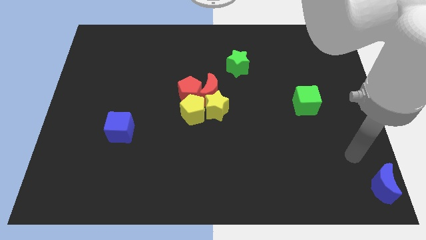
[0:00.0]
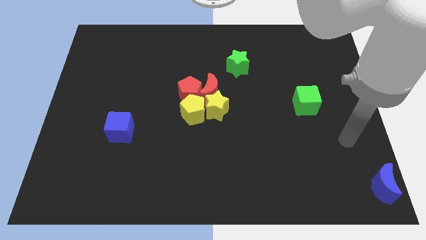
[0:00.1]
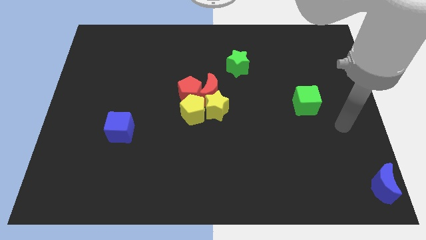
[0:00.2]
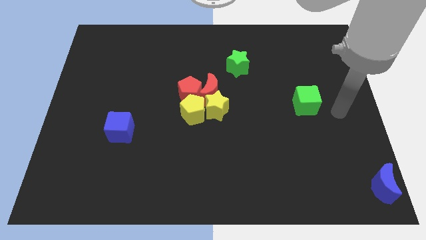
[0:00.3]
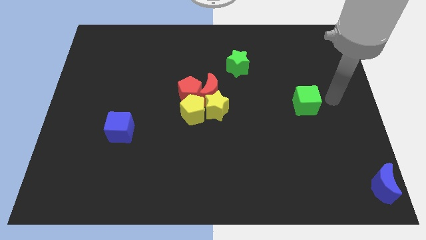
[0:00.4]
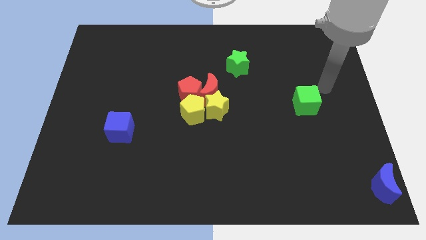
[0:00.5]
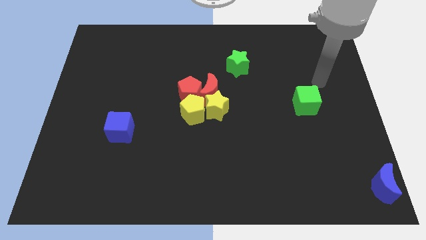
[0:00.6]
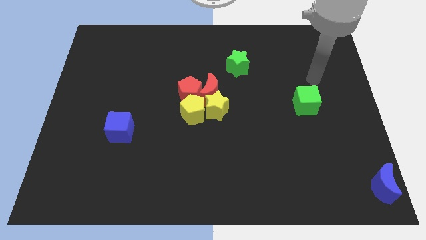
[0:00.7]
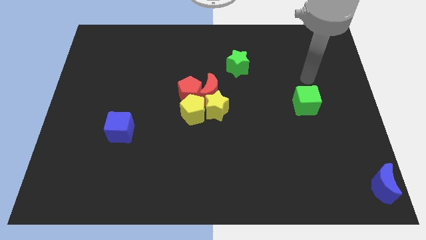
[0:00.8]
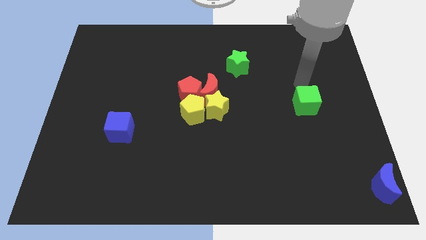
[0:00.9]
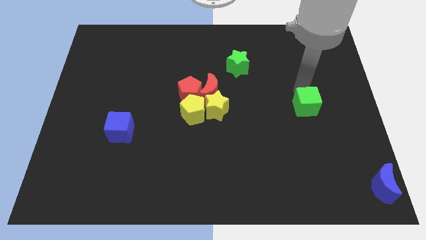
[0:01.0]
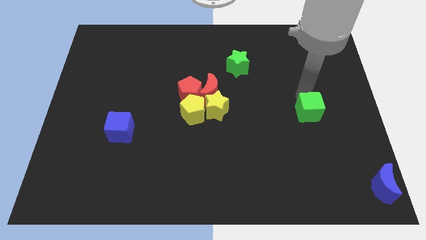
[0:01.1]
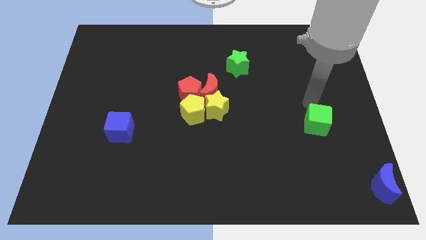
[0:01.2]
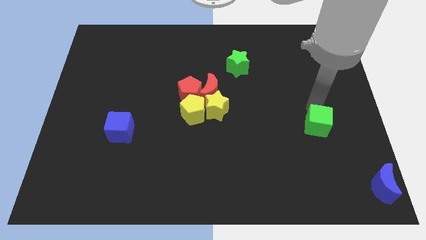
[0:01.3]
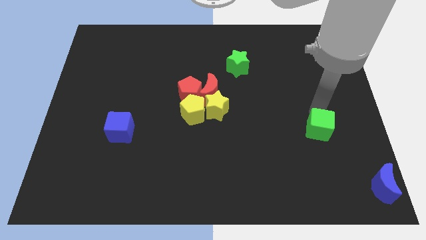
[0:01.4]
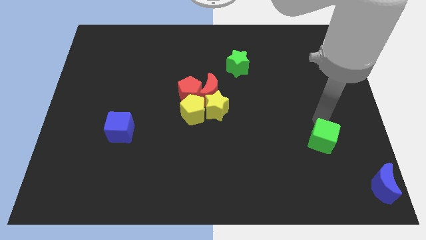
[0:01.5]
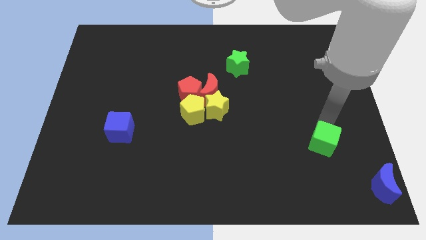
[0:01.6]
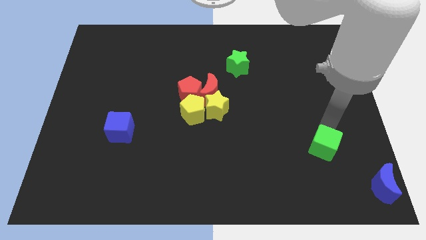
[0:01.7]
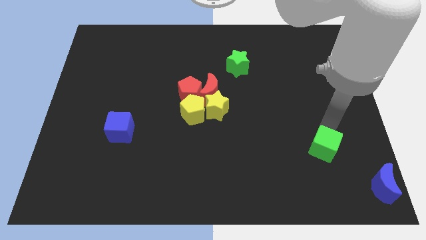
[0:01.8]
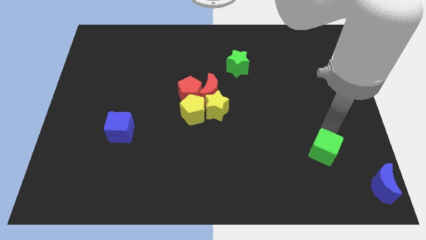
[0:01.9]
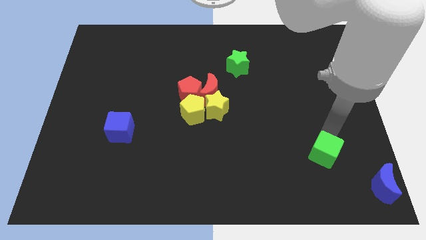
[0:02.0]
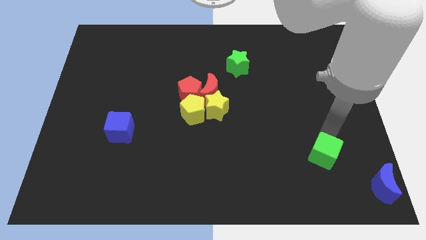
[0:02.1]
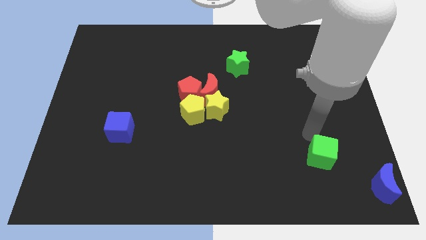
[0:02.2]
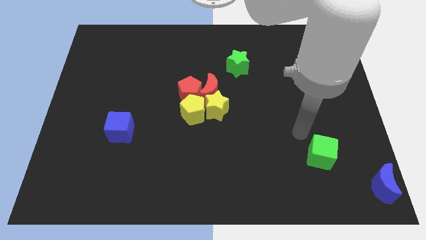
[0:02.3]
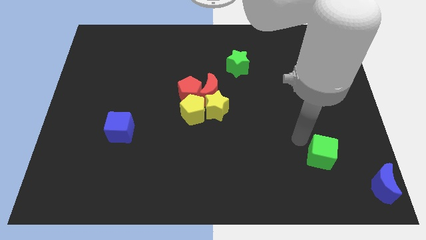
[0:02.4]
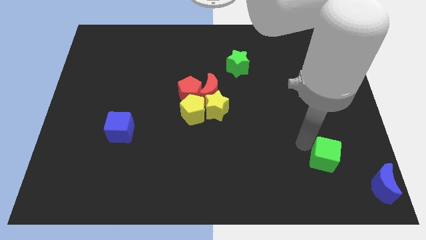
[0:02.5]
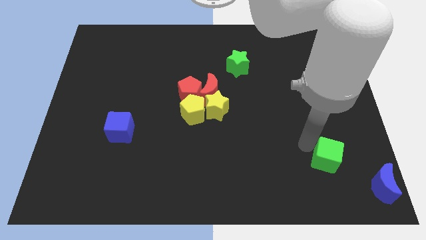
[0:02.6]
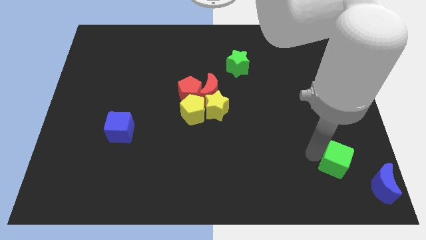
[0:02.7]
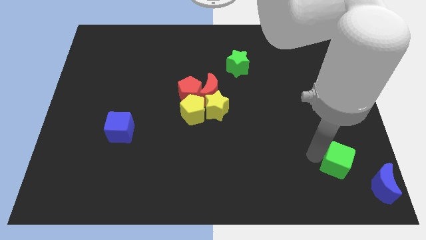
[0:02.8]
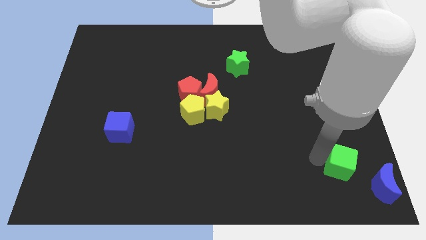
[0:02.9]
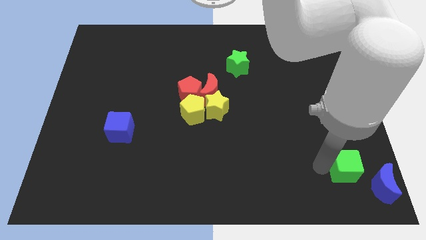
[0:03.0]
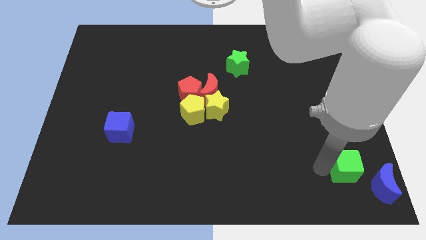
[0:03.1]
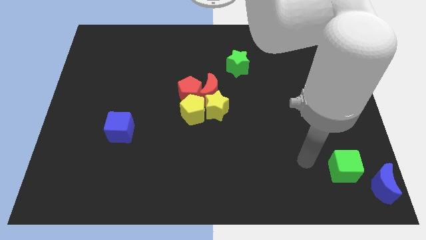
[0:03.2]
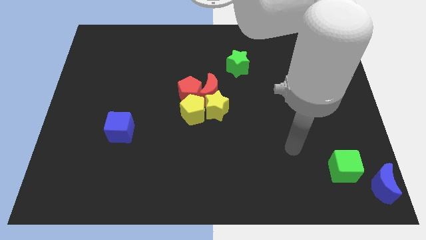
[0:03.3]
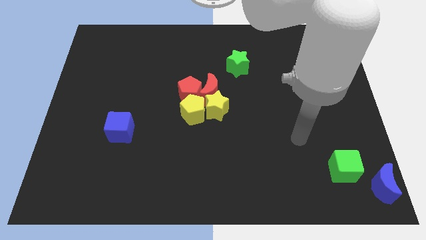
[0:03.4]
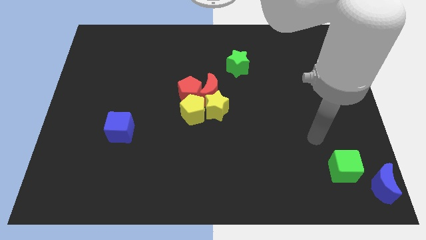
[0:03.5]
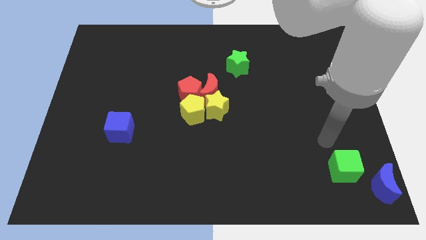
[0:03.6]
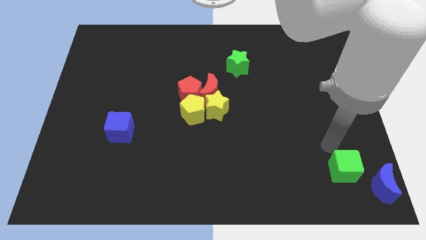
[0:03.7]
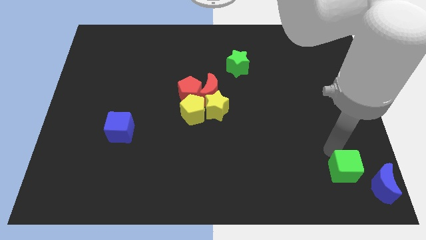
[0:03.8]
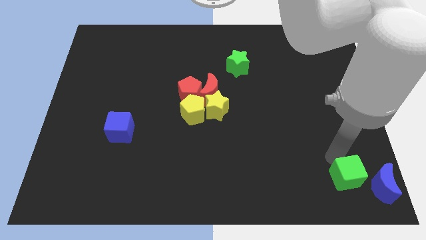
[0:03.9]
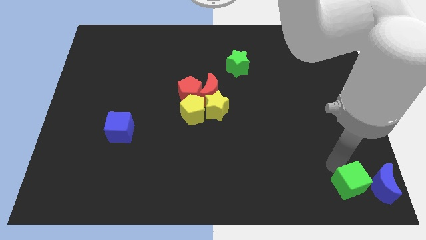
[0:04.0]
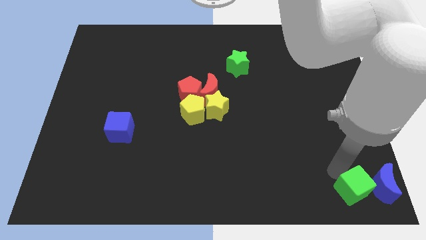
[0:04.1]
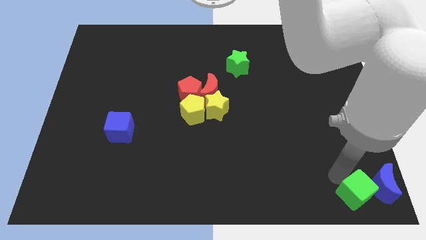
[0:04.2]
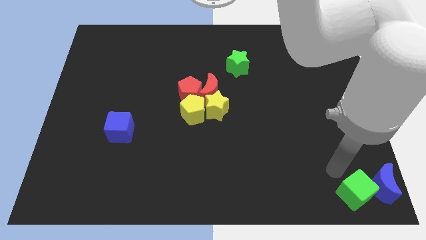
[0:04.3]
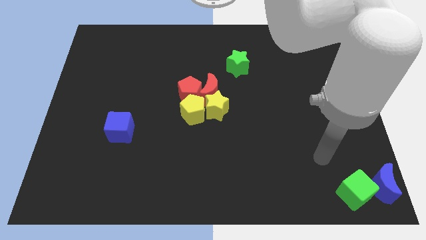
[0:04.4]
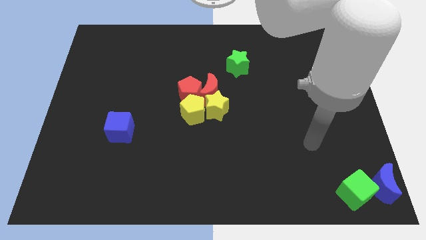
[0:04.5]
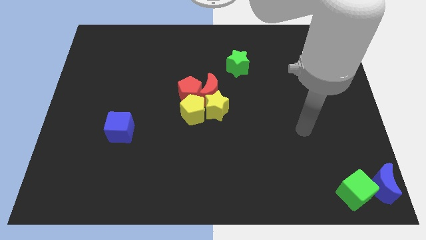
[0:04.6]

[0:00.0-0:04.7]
put the green cube on the left side of the blue crescent

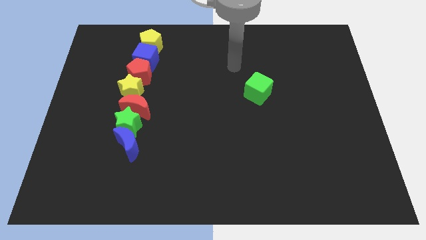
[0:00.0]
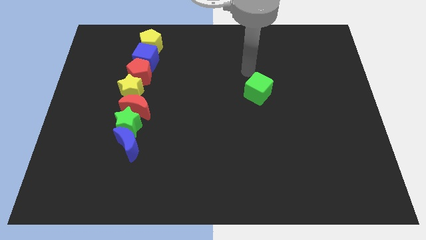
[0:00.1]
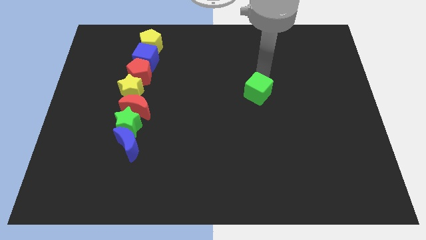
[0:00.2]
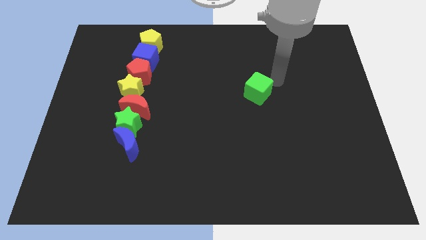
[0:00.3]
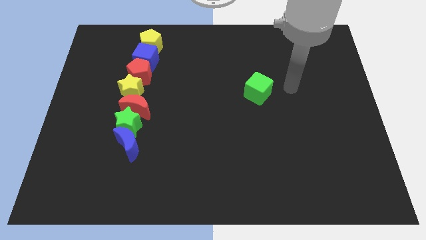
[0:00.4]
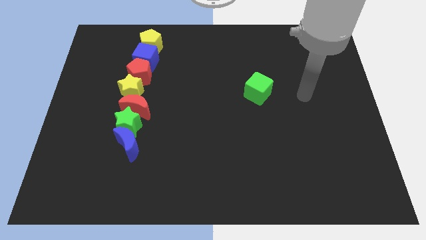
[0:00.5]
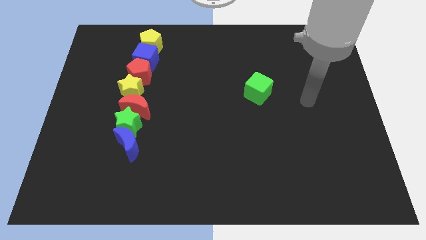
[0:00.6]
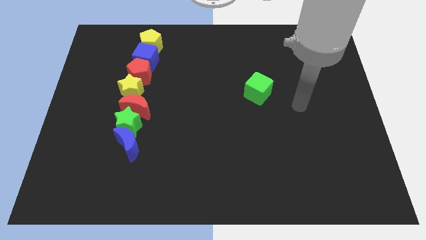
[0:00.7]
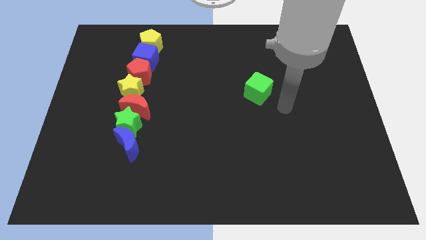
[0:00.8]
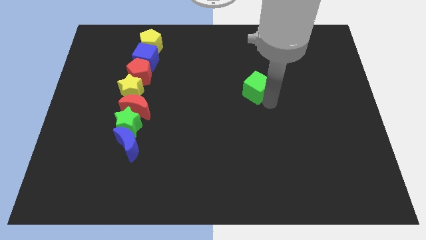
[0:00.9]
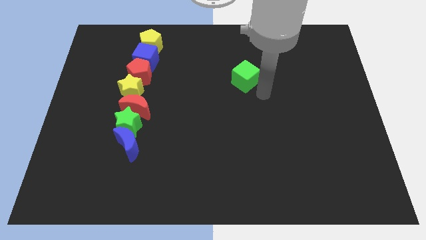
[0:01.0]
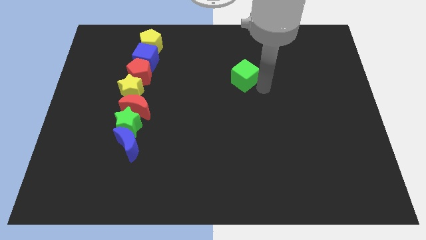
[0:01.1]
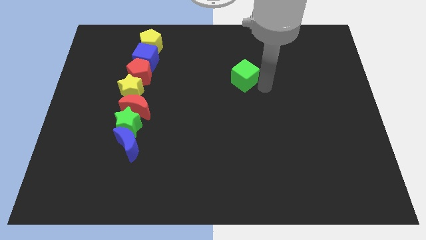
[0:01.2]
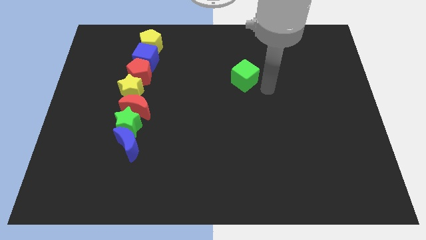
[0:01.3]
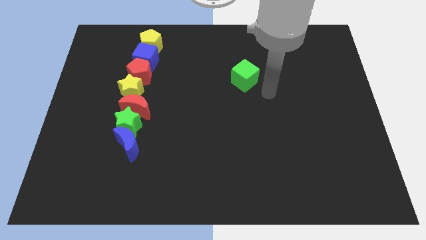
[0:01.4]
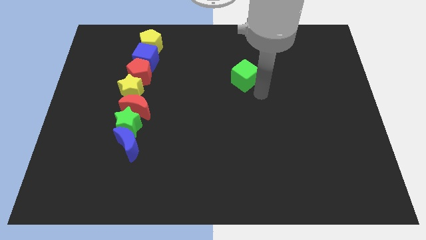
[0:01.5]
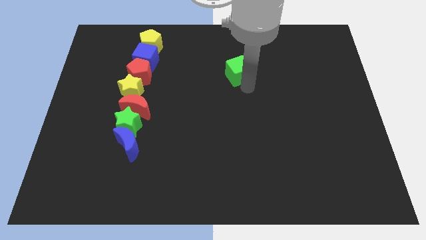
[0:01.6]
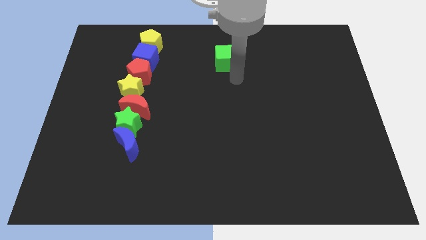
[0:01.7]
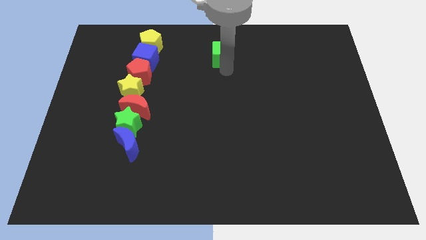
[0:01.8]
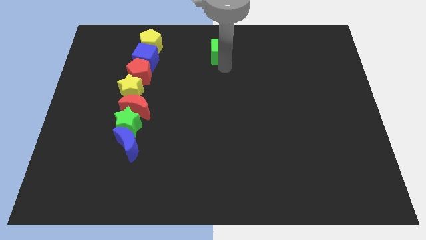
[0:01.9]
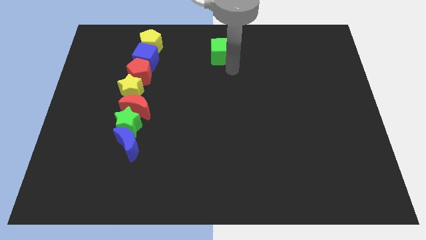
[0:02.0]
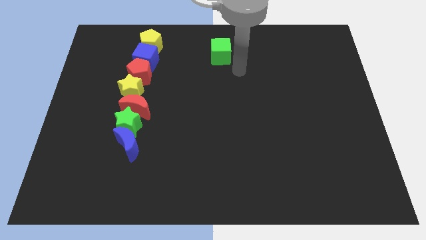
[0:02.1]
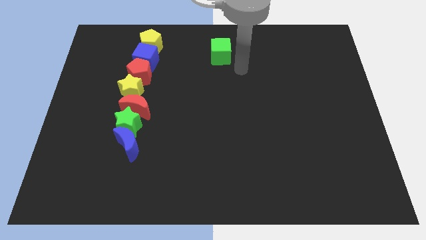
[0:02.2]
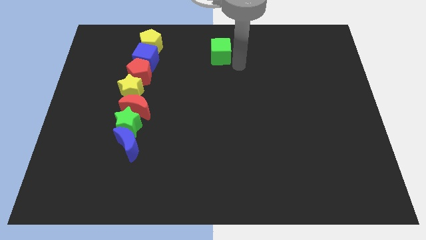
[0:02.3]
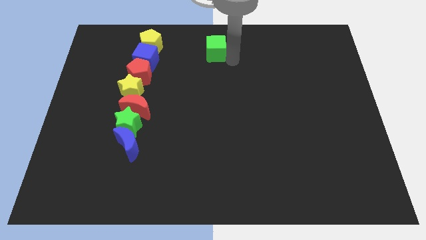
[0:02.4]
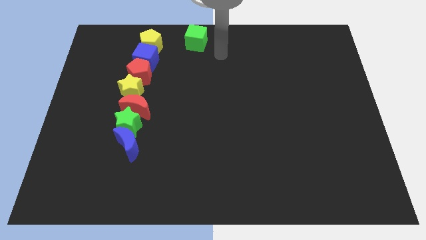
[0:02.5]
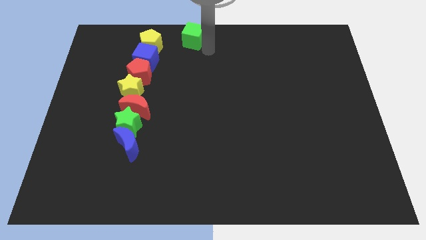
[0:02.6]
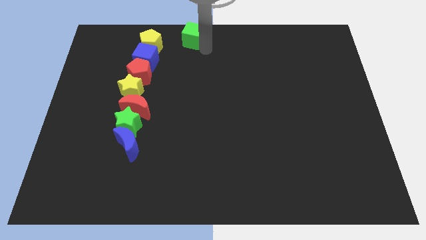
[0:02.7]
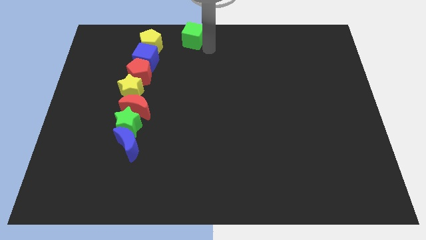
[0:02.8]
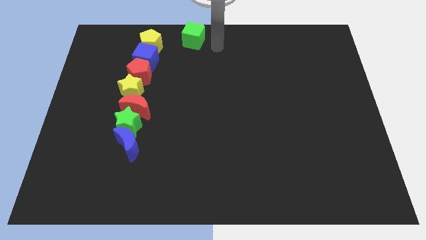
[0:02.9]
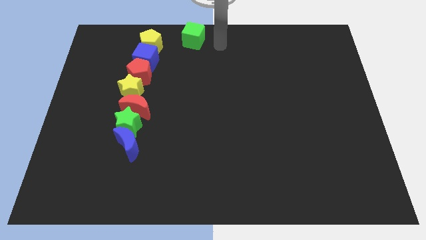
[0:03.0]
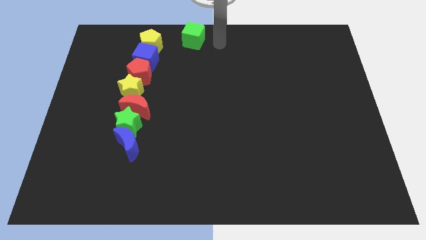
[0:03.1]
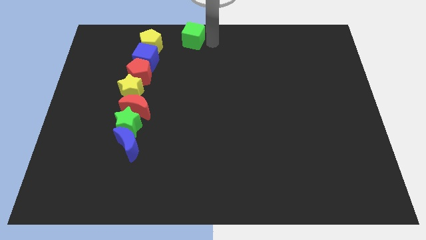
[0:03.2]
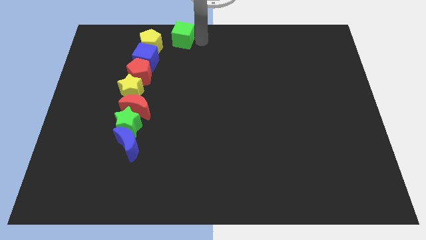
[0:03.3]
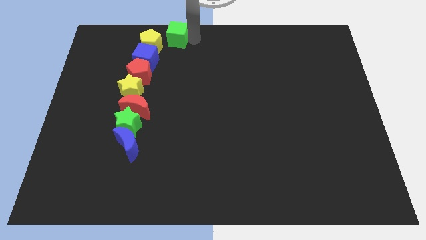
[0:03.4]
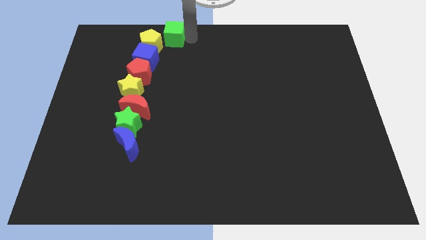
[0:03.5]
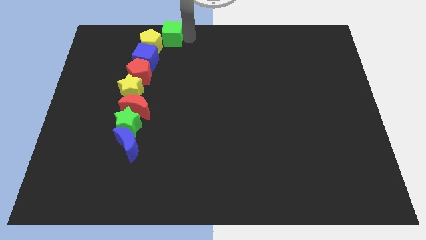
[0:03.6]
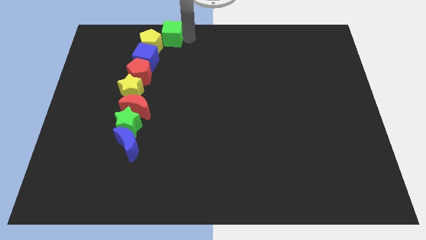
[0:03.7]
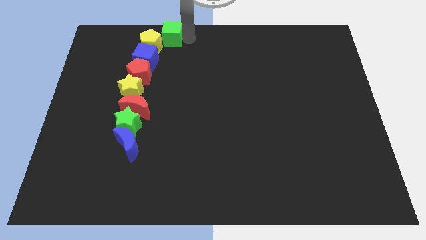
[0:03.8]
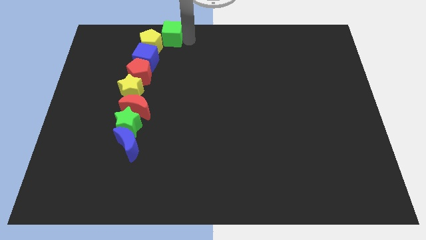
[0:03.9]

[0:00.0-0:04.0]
move the green cube towards the yellow pentagon

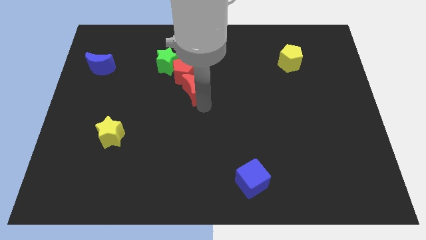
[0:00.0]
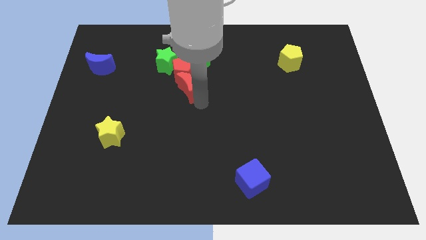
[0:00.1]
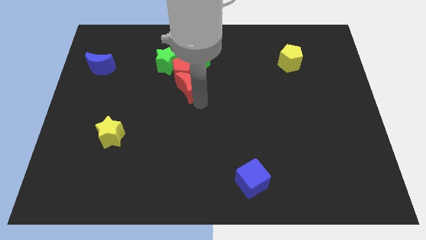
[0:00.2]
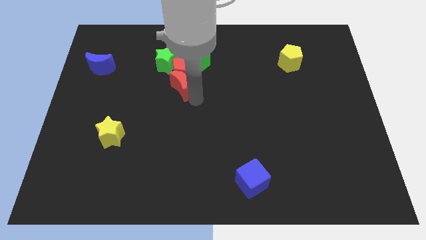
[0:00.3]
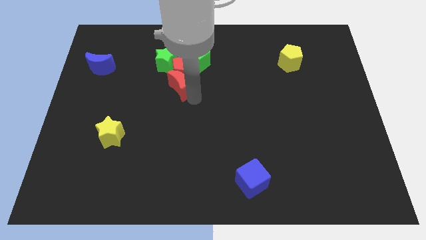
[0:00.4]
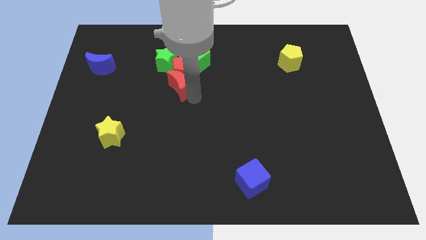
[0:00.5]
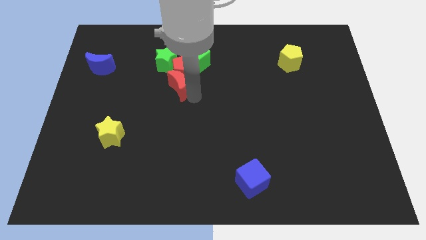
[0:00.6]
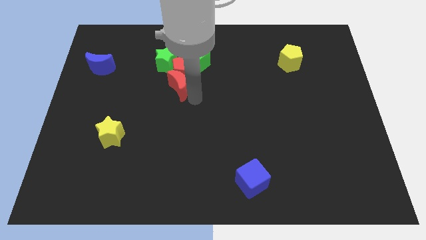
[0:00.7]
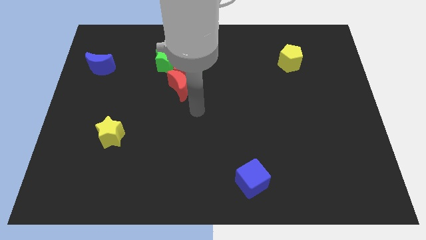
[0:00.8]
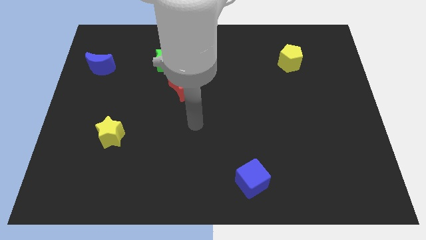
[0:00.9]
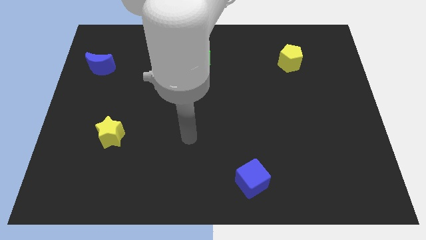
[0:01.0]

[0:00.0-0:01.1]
push red moon slightly at top left
